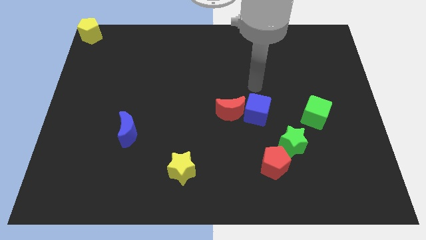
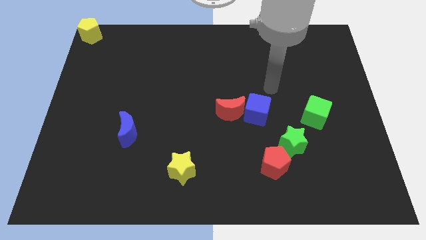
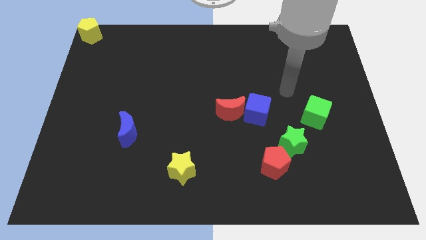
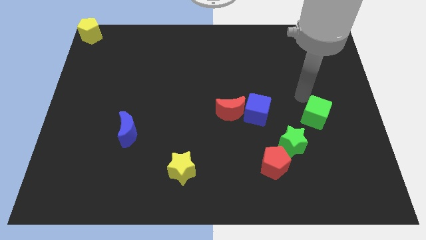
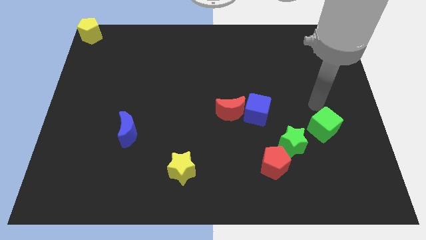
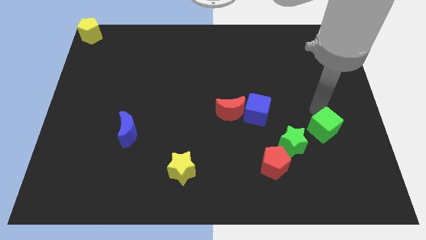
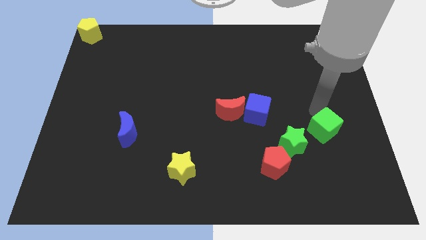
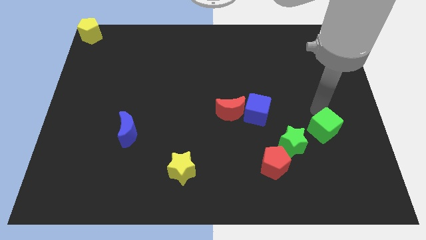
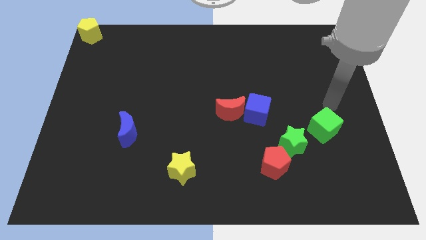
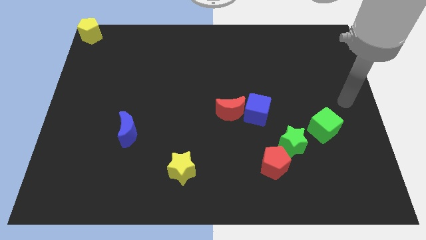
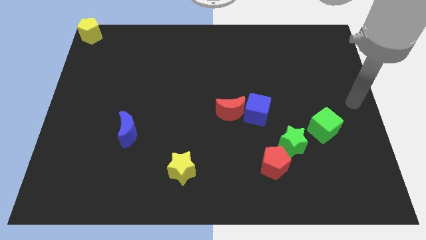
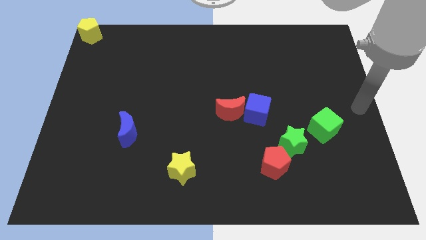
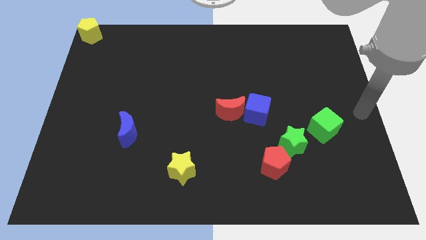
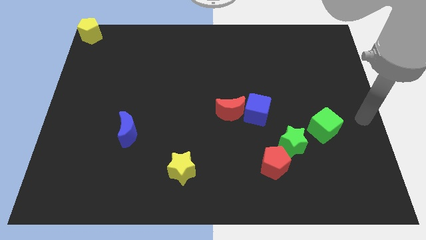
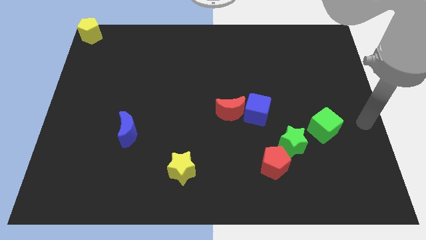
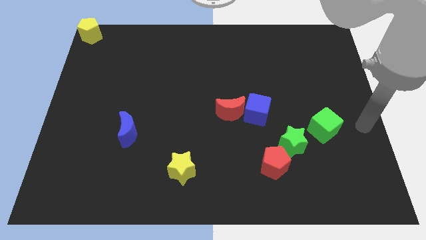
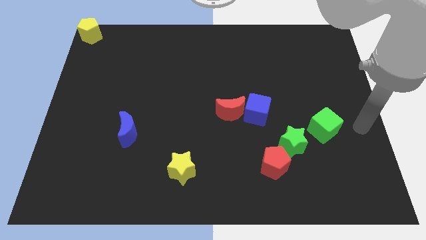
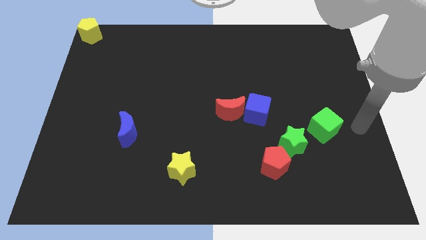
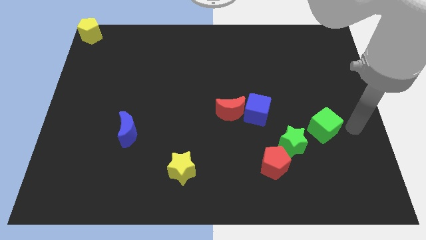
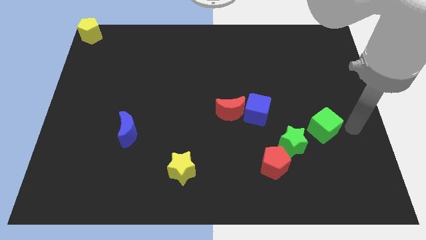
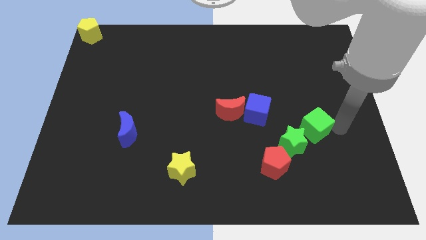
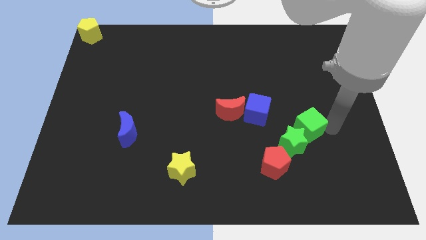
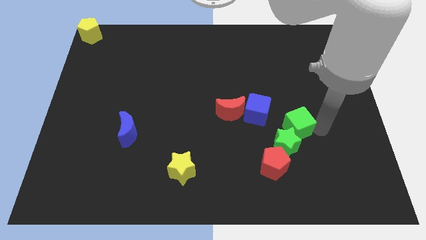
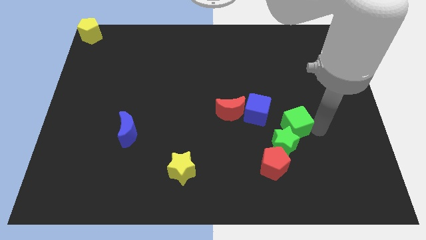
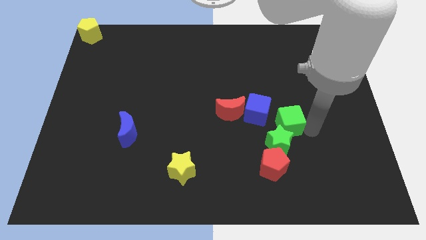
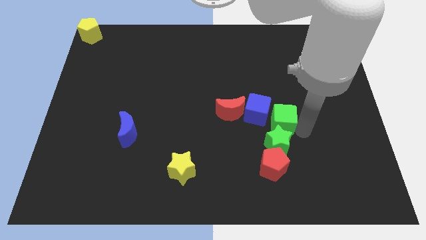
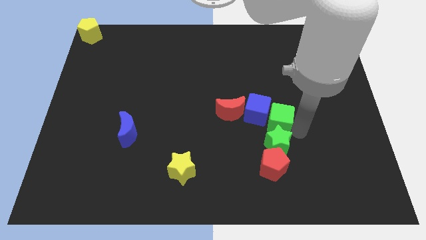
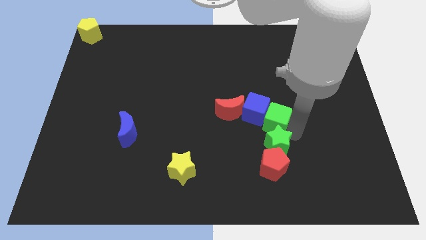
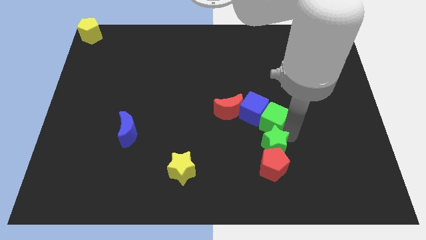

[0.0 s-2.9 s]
place the green cube right to the blue cube

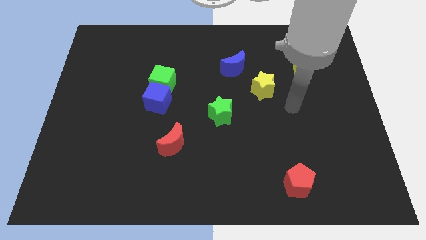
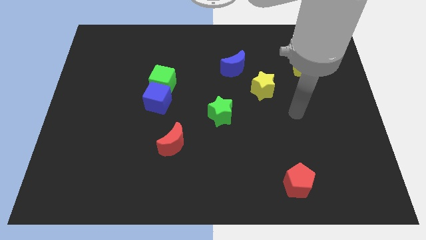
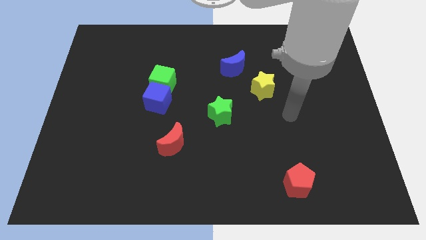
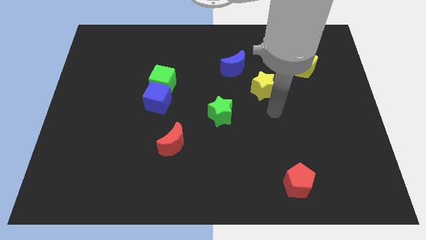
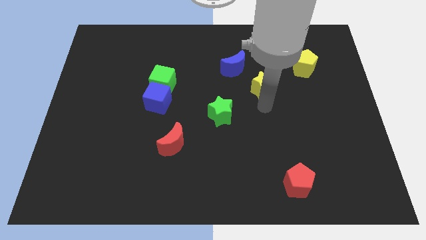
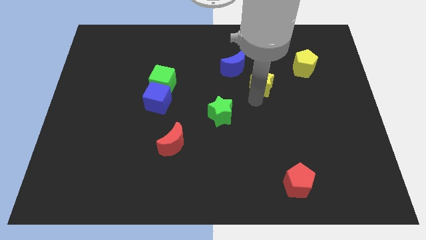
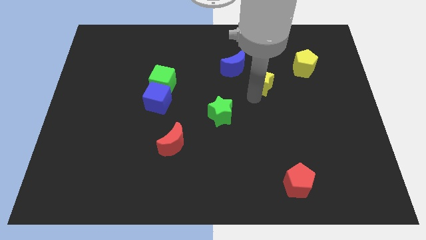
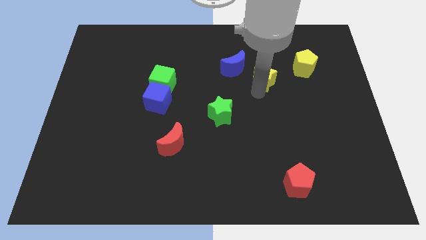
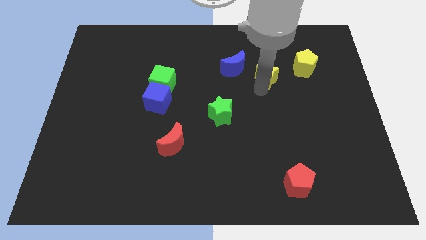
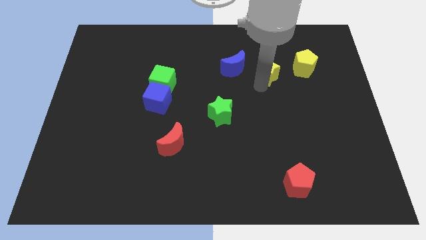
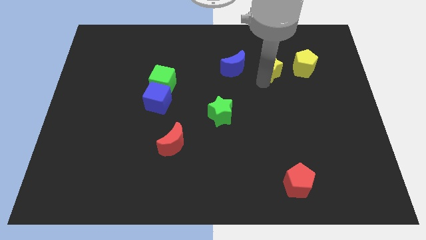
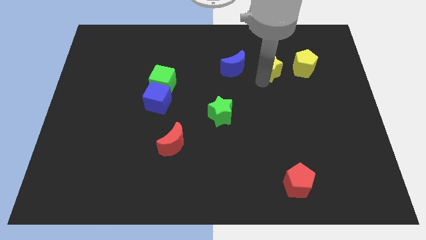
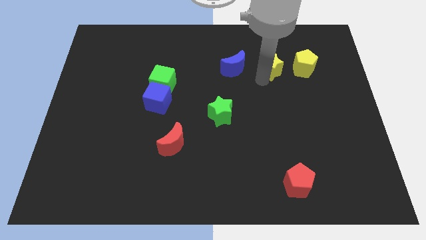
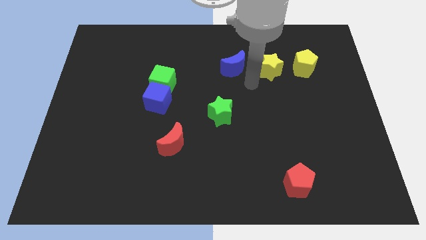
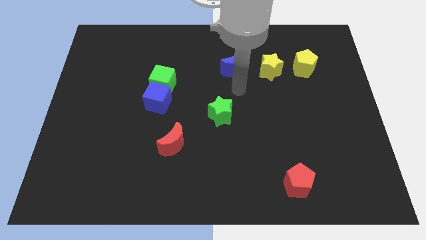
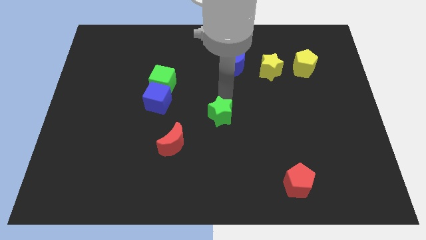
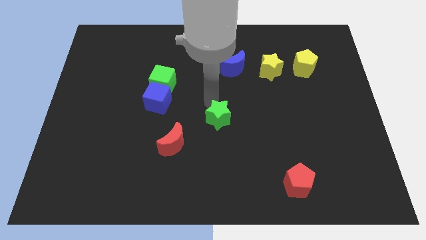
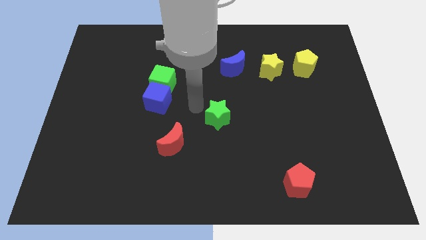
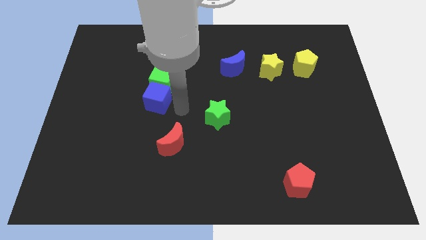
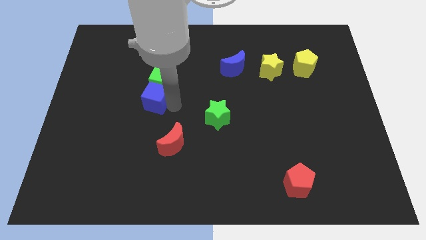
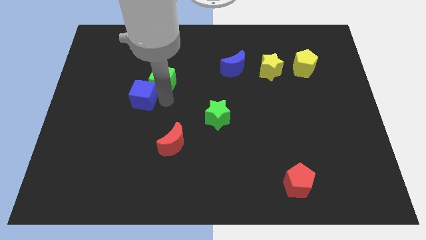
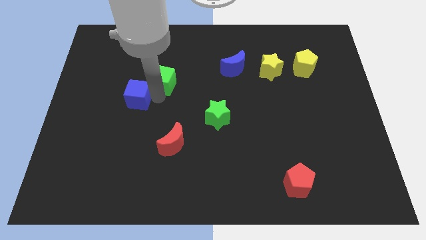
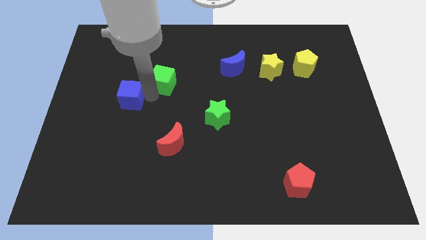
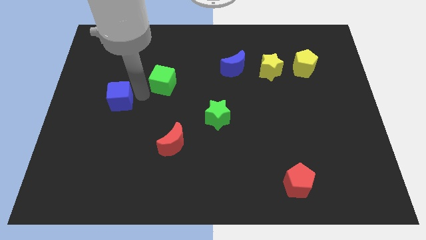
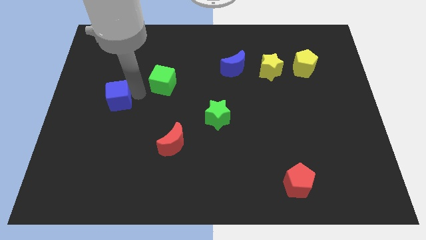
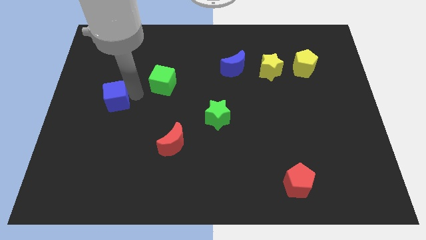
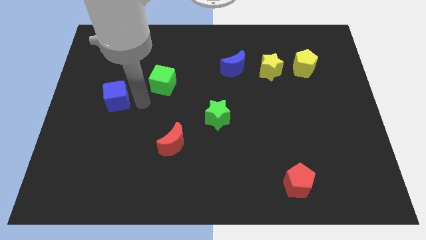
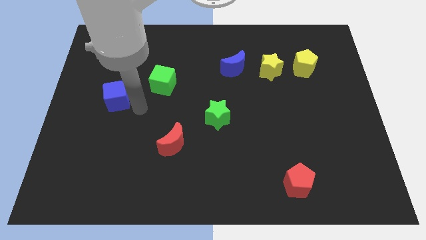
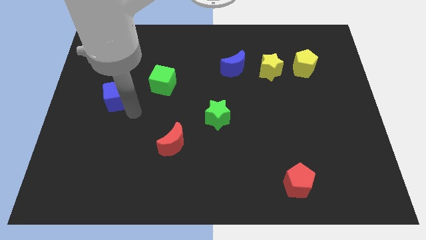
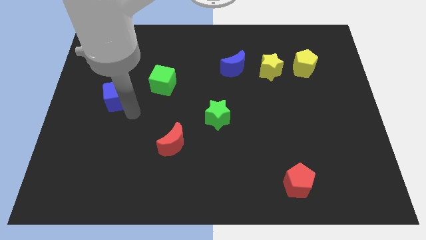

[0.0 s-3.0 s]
place blue cube diagonally above the red crescent

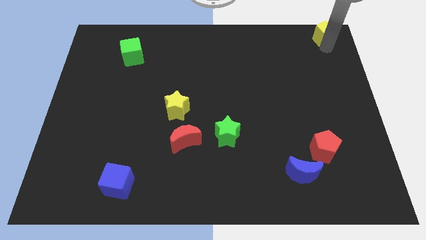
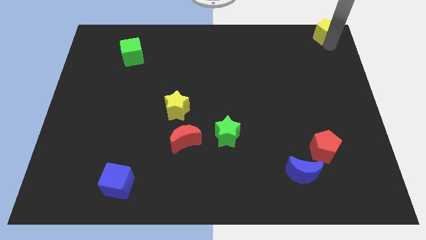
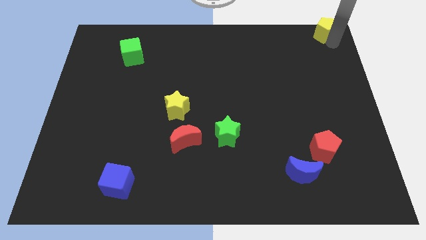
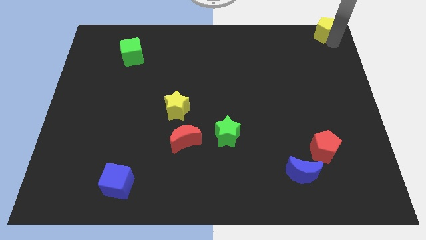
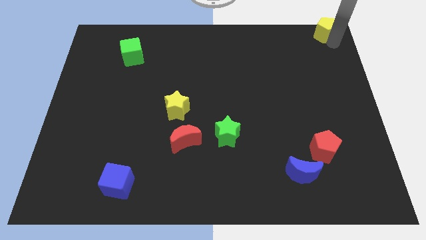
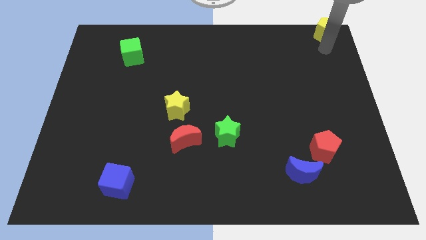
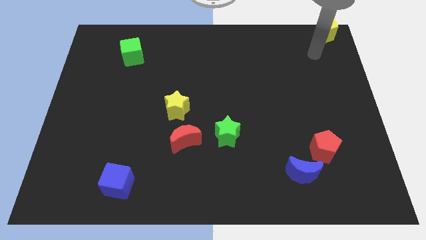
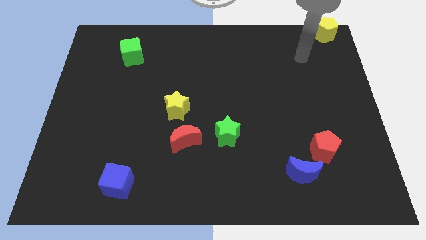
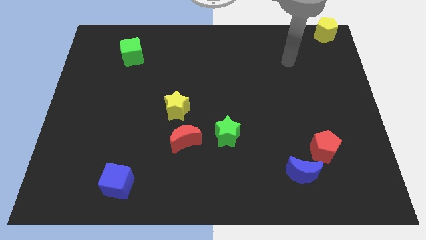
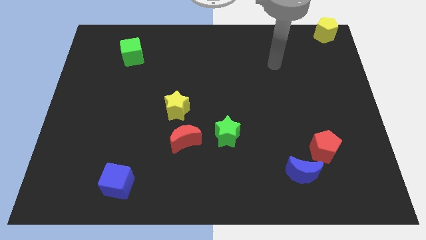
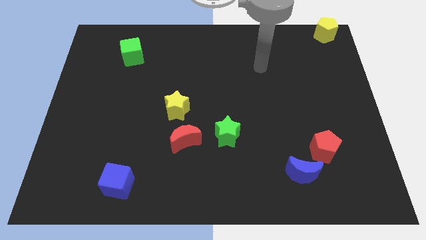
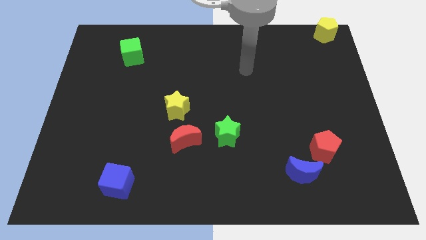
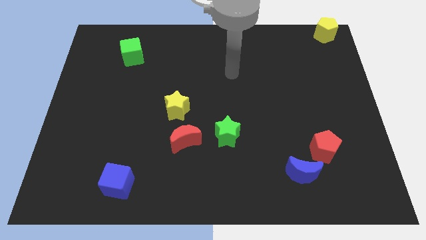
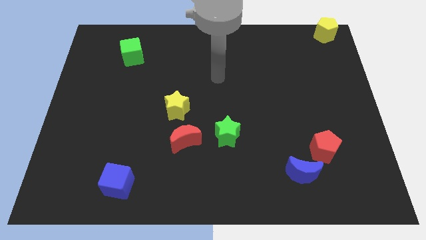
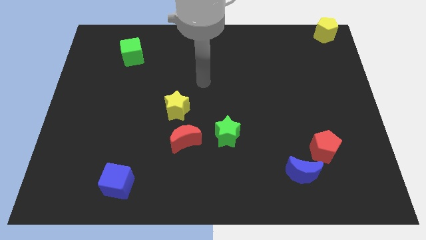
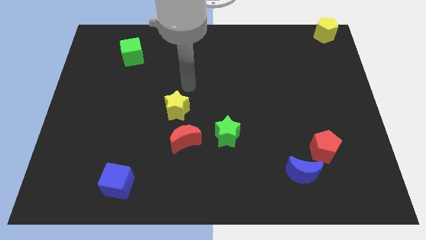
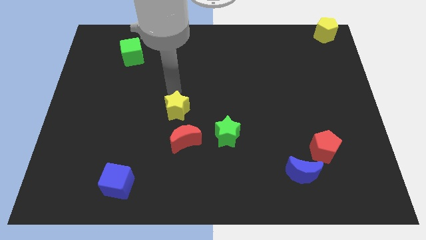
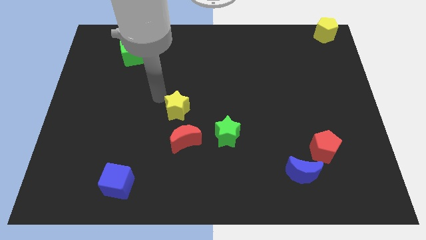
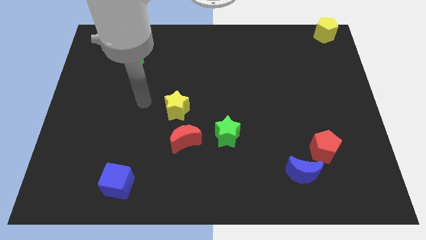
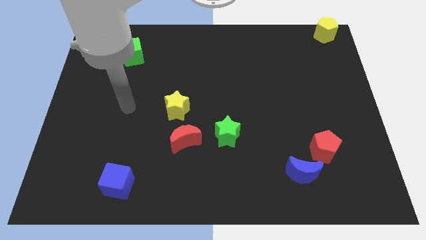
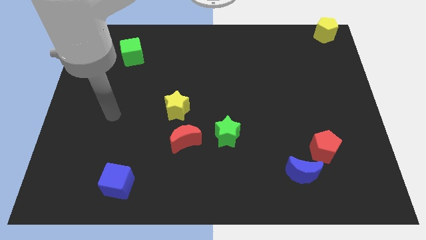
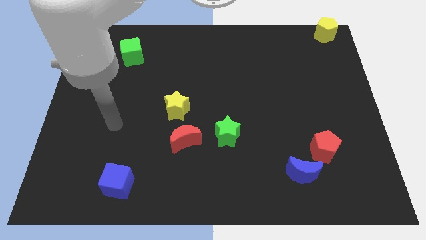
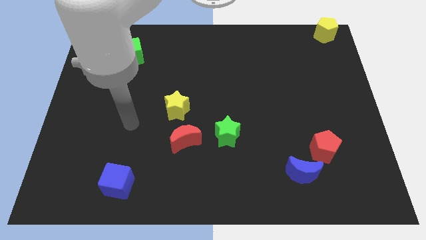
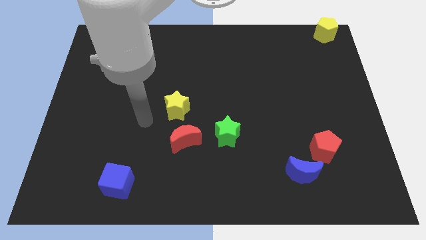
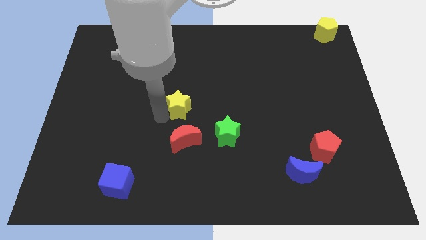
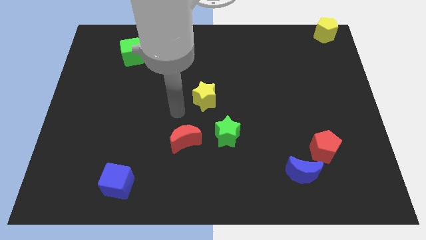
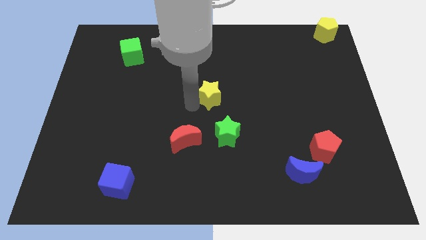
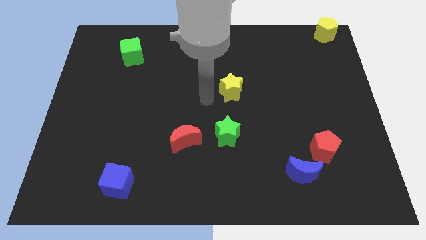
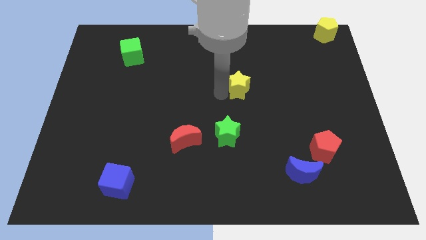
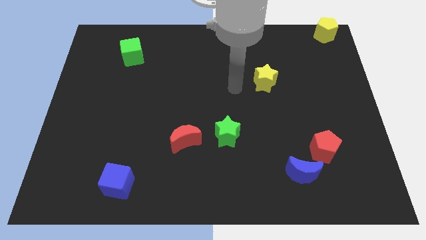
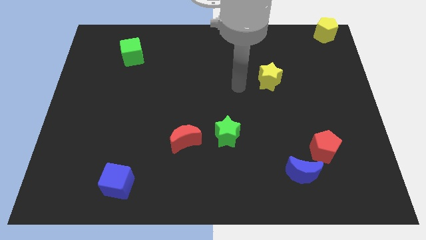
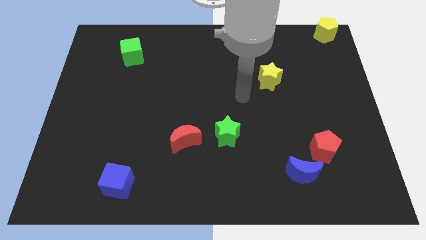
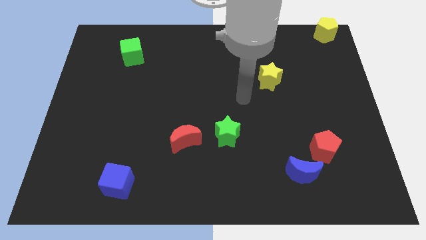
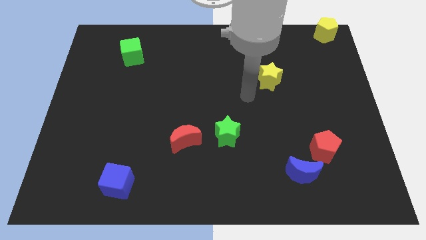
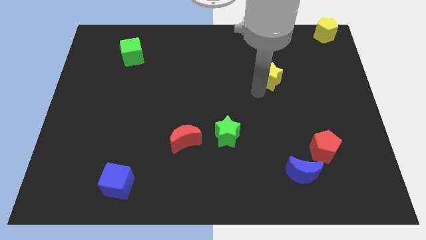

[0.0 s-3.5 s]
move the yellow star to the top right of the green star
